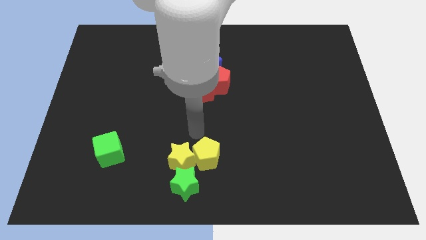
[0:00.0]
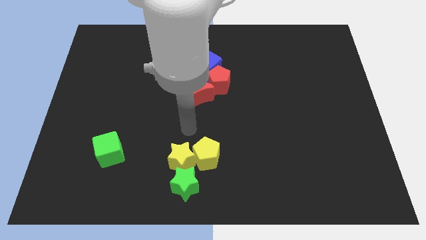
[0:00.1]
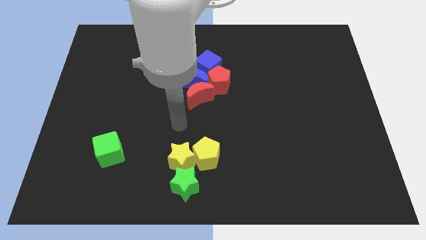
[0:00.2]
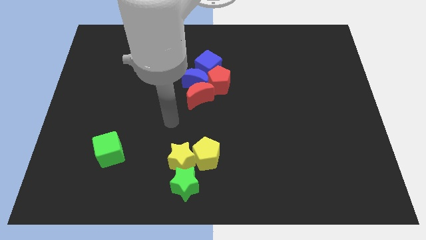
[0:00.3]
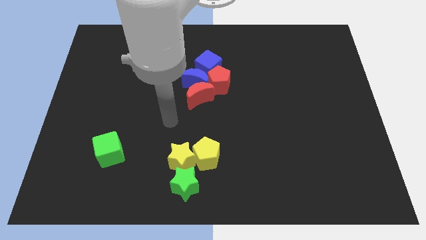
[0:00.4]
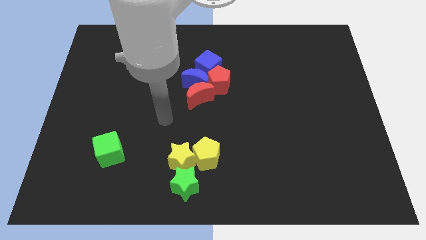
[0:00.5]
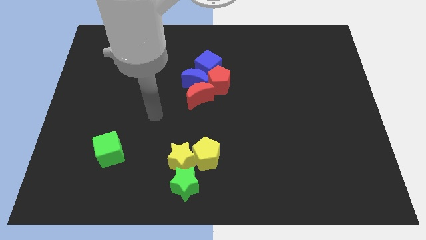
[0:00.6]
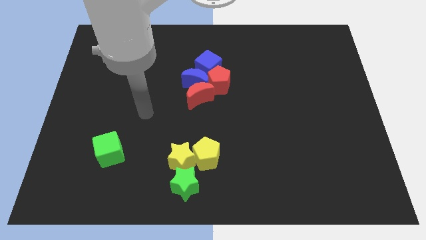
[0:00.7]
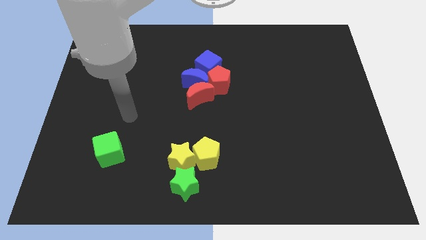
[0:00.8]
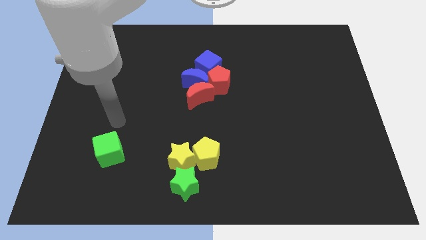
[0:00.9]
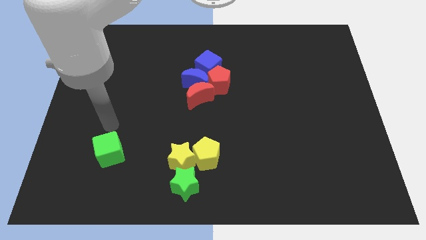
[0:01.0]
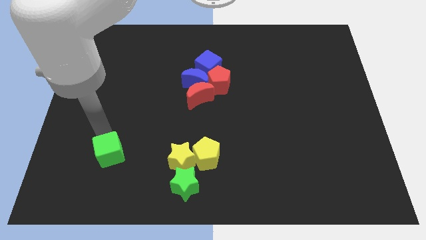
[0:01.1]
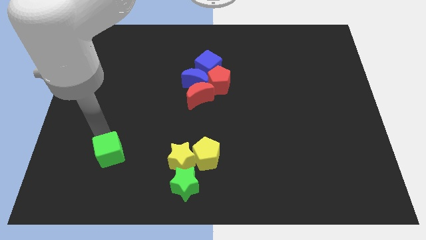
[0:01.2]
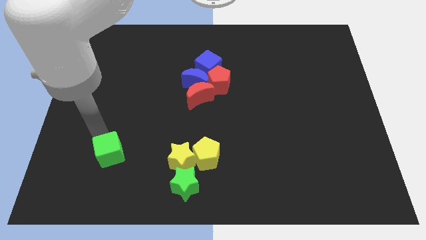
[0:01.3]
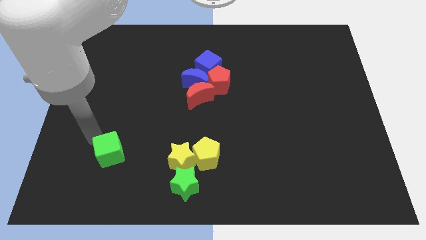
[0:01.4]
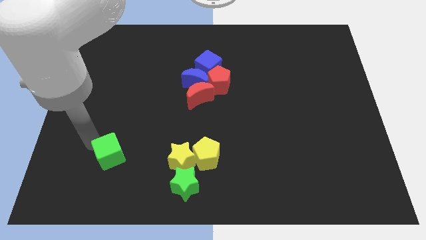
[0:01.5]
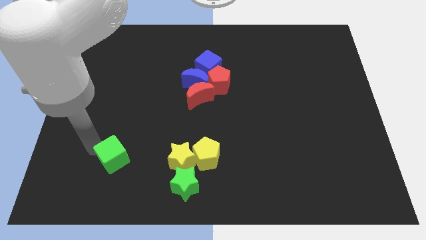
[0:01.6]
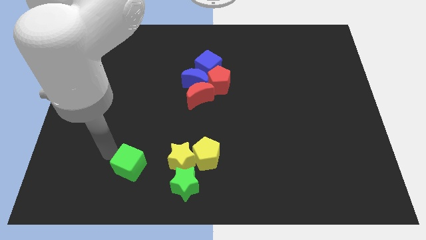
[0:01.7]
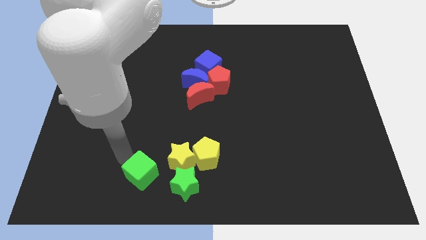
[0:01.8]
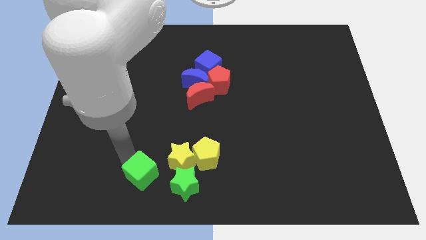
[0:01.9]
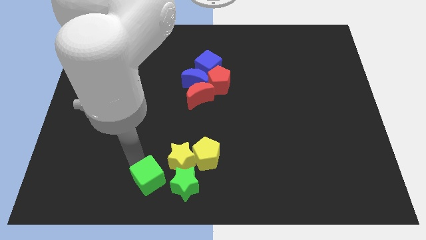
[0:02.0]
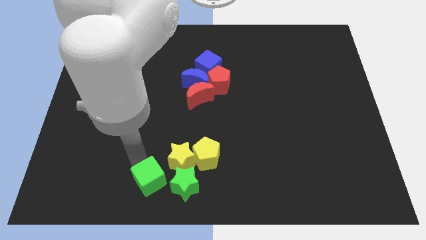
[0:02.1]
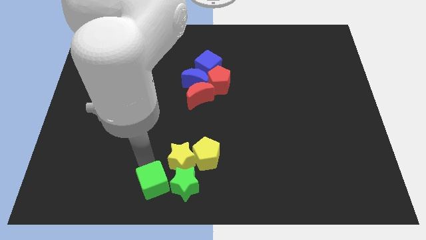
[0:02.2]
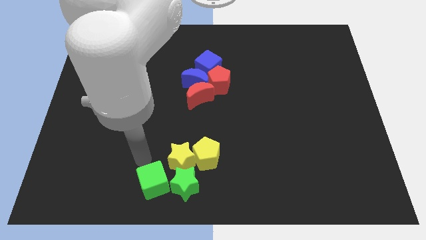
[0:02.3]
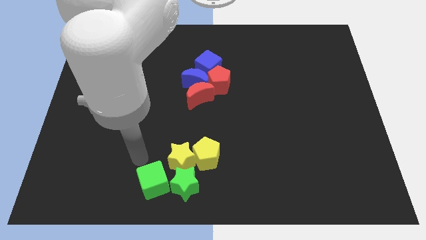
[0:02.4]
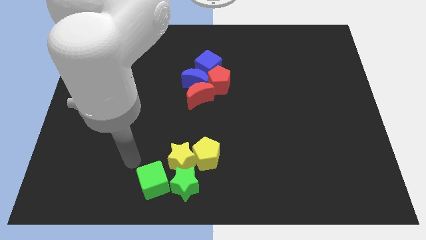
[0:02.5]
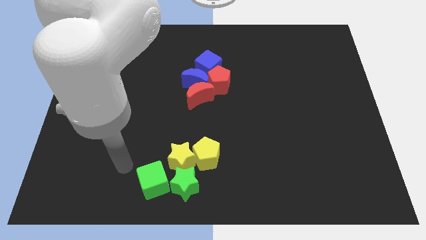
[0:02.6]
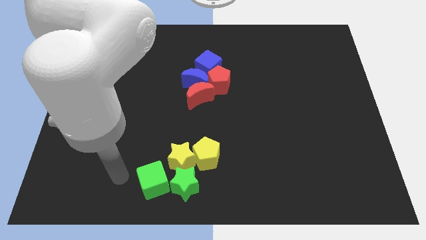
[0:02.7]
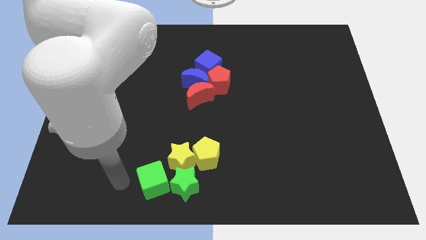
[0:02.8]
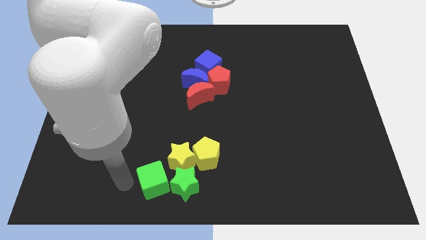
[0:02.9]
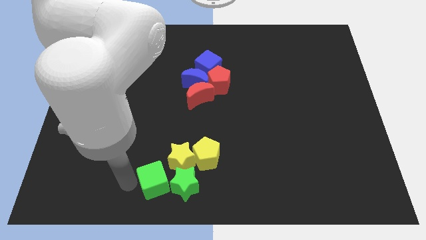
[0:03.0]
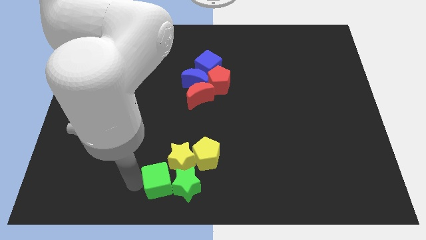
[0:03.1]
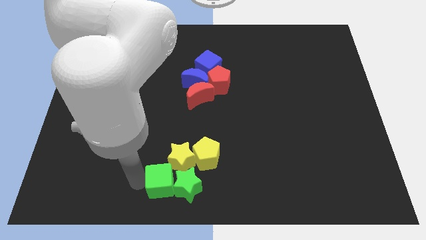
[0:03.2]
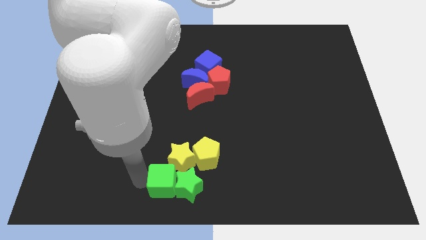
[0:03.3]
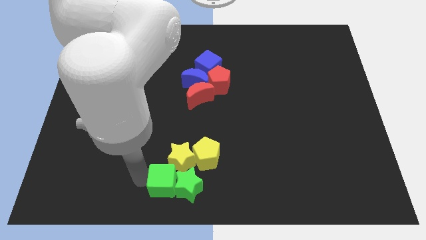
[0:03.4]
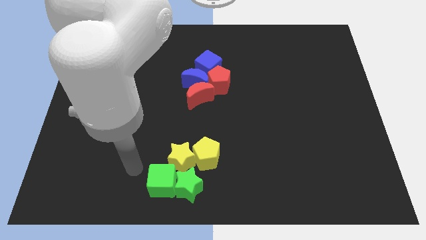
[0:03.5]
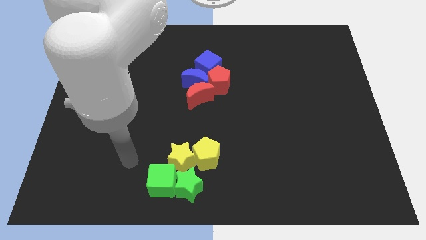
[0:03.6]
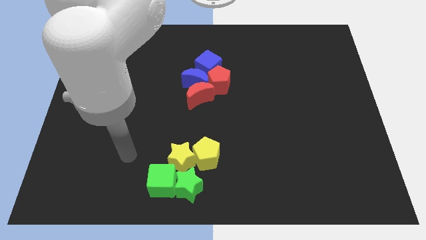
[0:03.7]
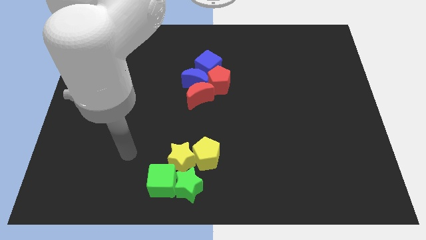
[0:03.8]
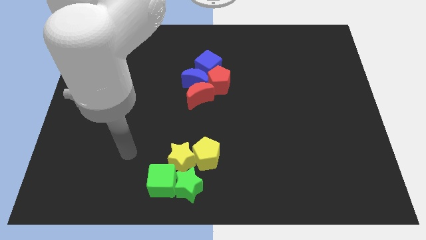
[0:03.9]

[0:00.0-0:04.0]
push the green cube into the green star

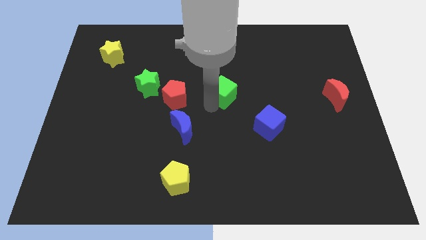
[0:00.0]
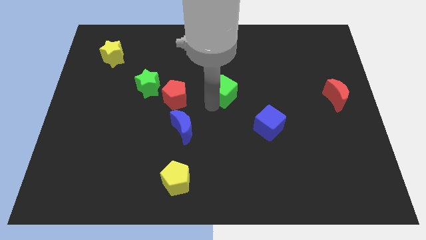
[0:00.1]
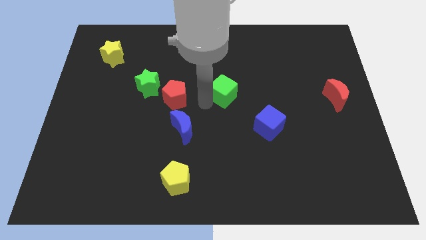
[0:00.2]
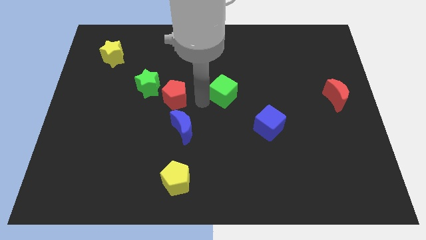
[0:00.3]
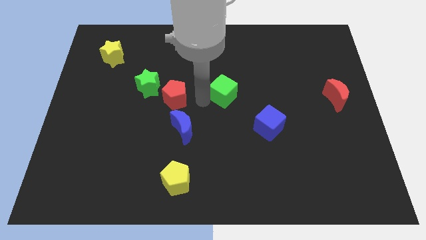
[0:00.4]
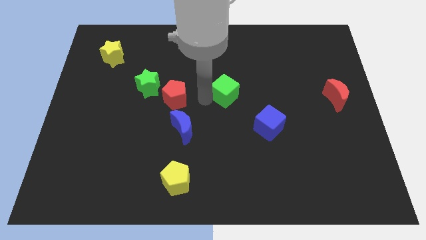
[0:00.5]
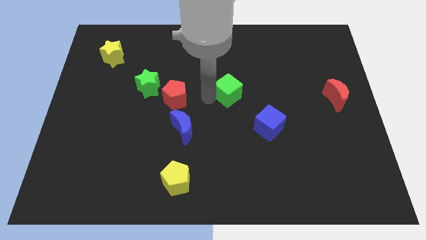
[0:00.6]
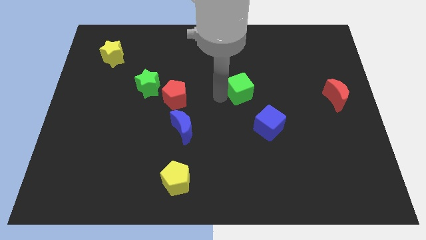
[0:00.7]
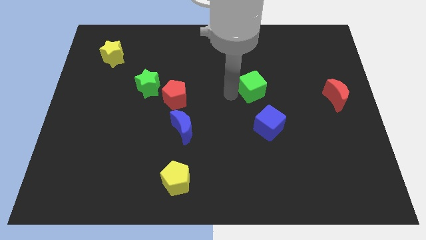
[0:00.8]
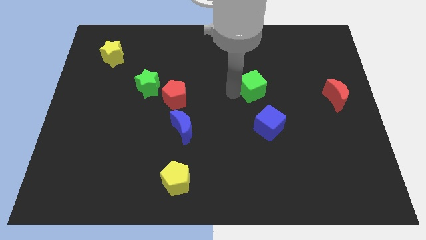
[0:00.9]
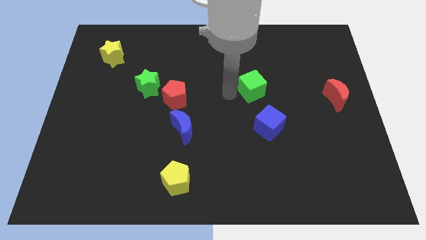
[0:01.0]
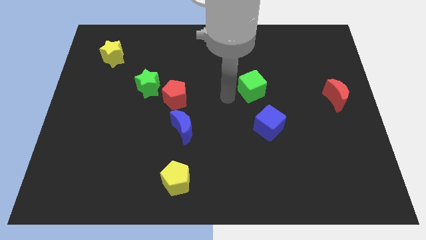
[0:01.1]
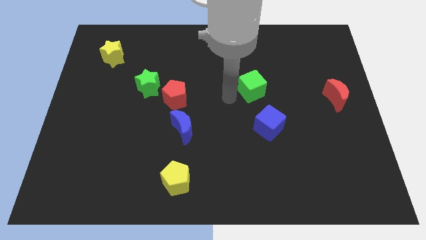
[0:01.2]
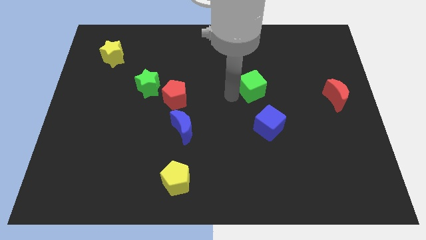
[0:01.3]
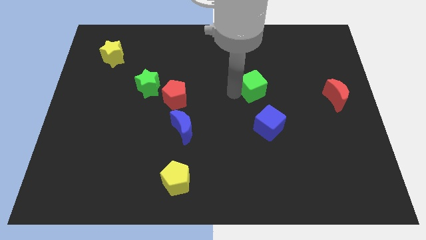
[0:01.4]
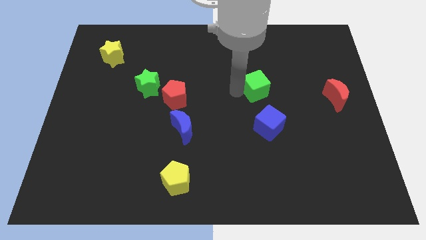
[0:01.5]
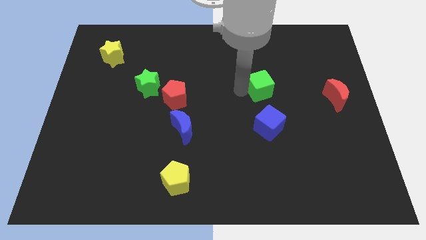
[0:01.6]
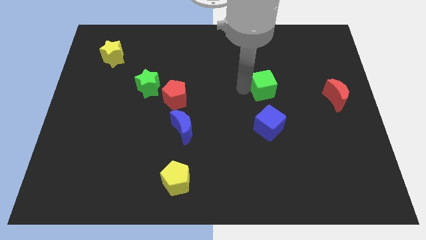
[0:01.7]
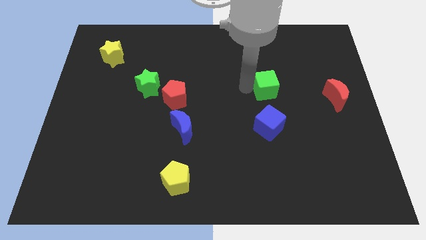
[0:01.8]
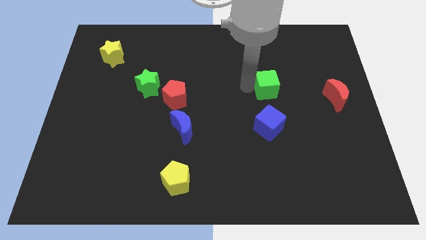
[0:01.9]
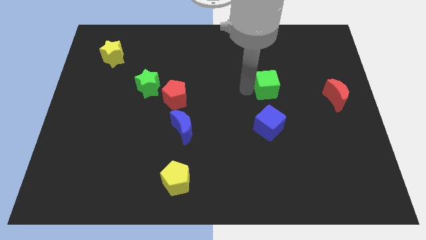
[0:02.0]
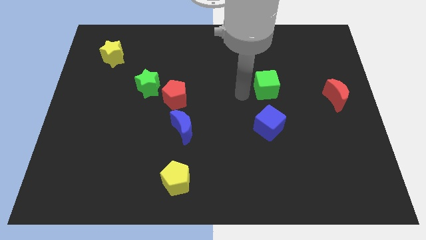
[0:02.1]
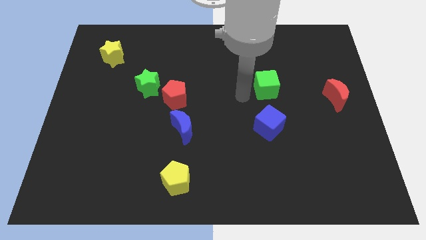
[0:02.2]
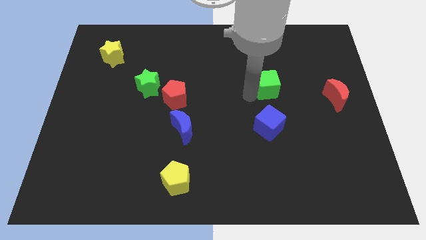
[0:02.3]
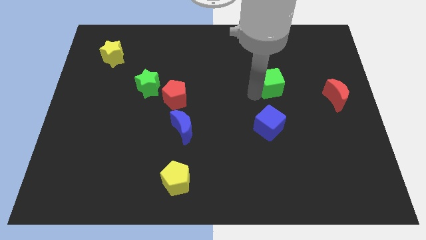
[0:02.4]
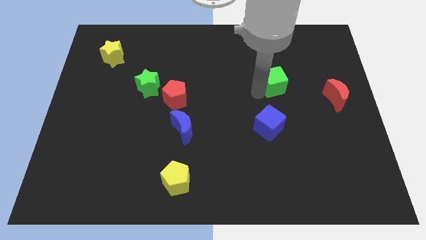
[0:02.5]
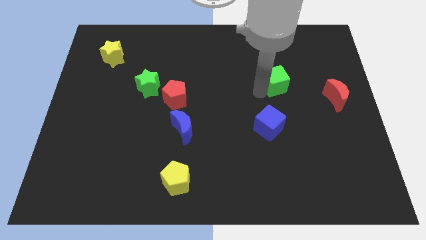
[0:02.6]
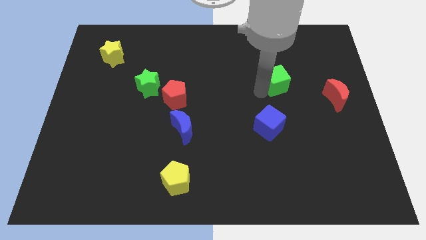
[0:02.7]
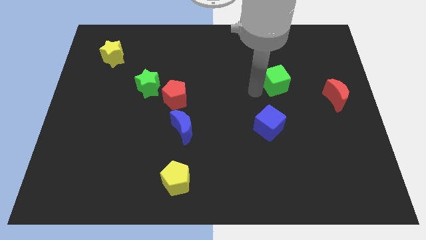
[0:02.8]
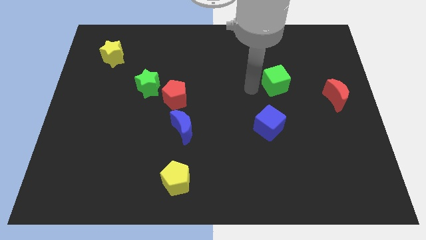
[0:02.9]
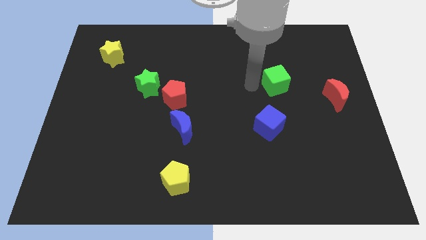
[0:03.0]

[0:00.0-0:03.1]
place green cube above blue cube

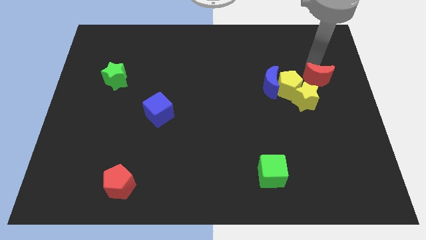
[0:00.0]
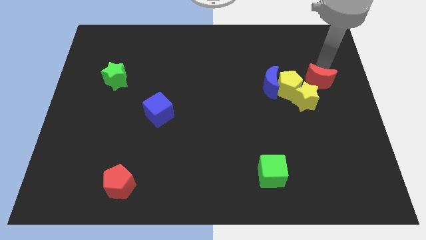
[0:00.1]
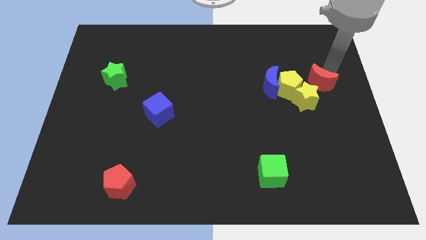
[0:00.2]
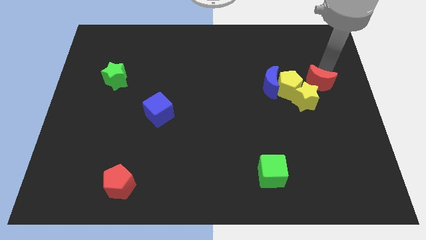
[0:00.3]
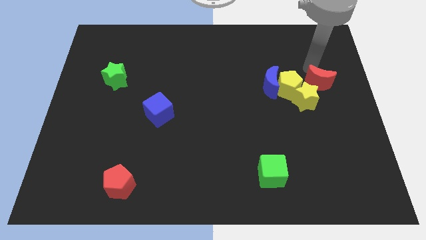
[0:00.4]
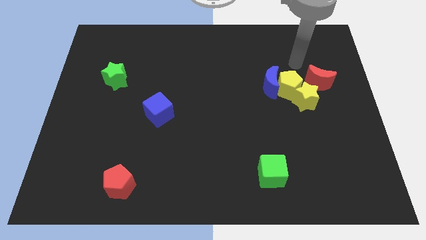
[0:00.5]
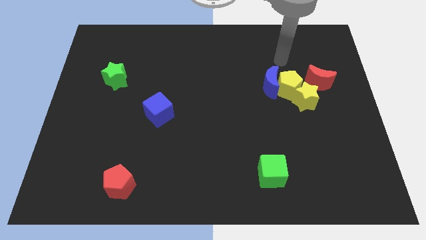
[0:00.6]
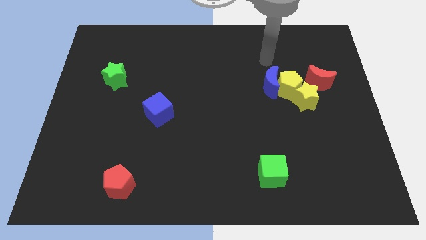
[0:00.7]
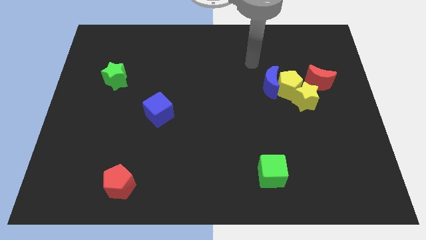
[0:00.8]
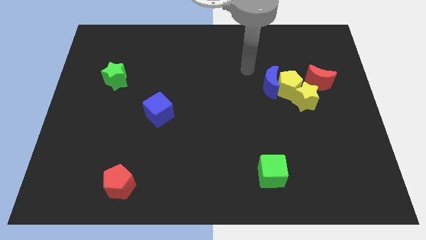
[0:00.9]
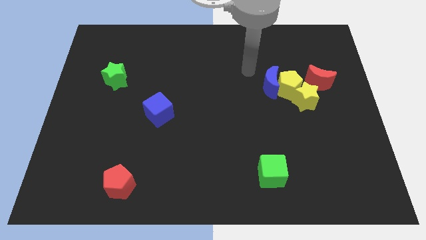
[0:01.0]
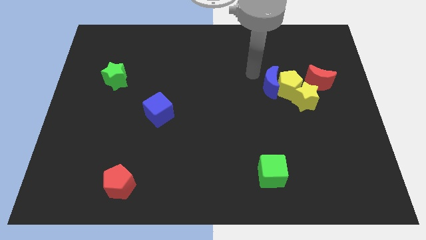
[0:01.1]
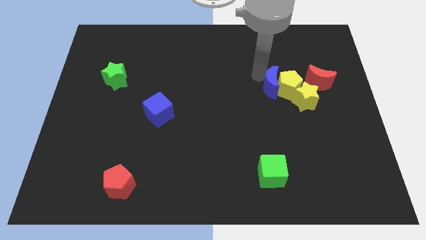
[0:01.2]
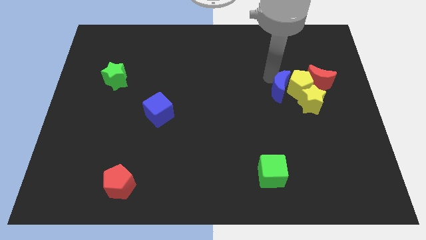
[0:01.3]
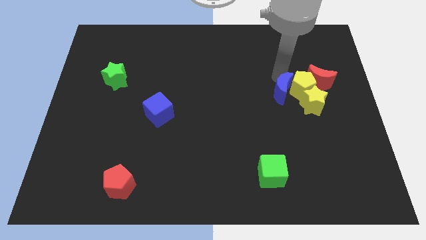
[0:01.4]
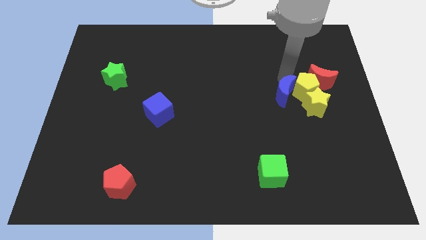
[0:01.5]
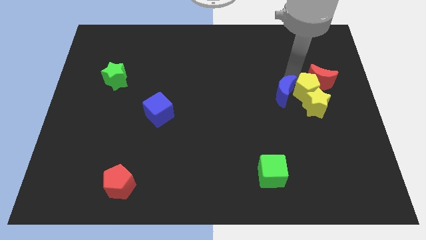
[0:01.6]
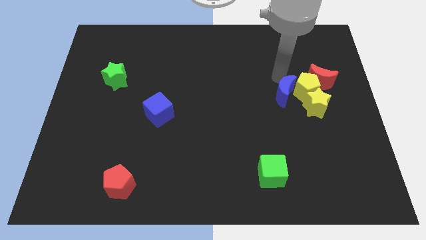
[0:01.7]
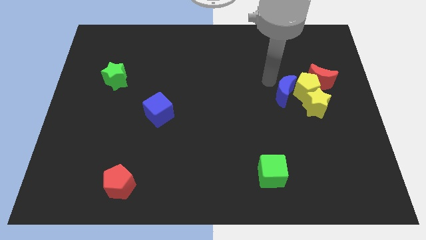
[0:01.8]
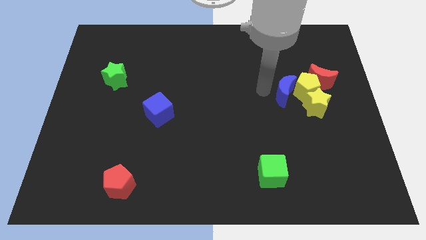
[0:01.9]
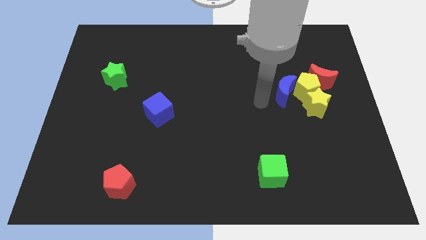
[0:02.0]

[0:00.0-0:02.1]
slightly push the red crescent on the board
